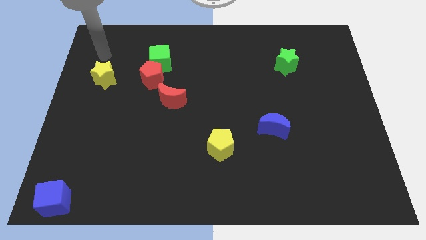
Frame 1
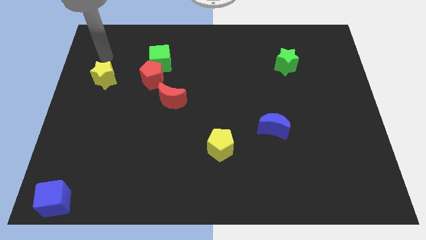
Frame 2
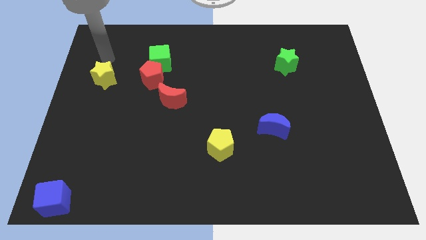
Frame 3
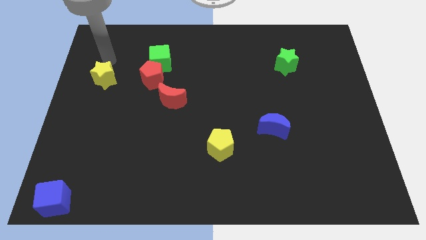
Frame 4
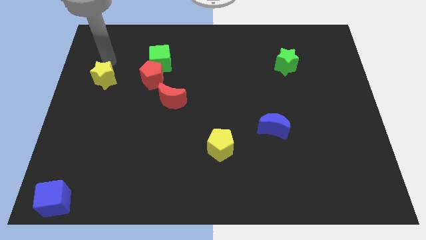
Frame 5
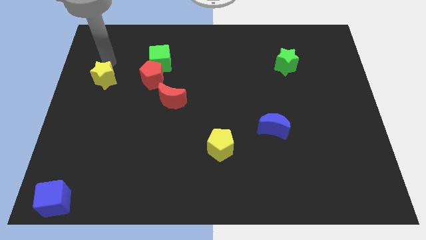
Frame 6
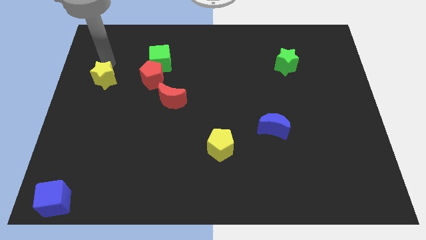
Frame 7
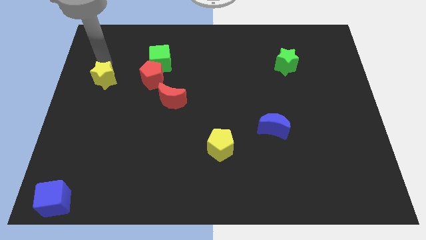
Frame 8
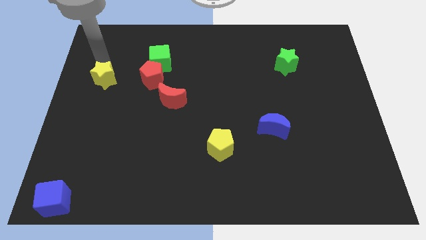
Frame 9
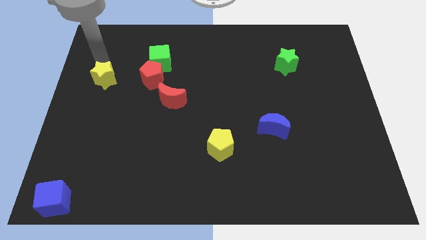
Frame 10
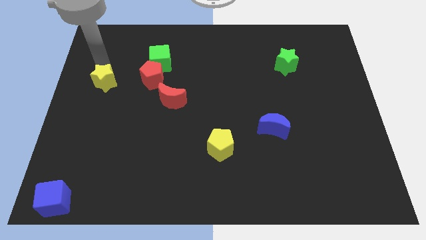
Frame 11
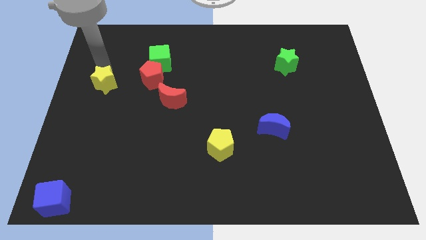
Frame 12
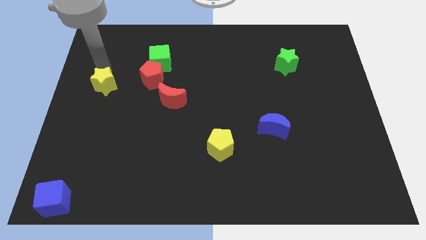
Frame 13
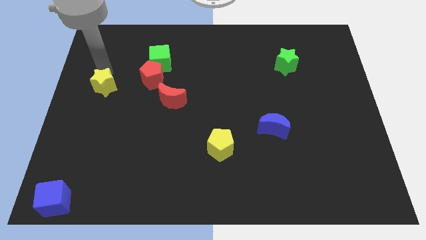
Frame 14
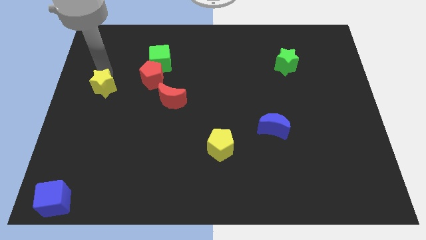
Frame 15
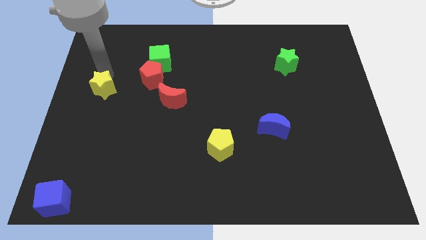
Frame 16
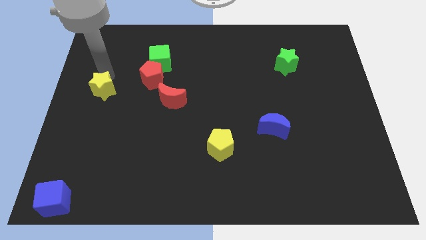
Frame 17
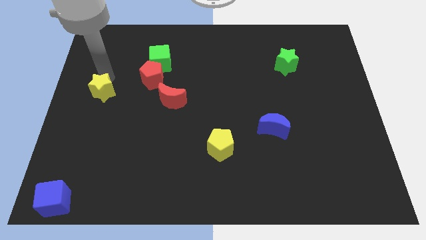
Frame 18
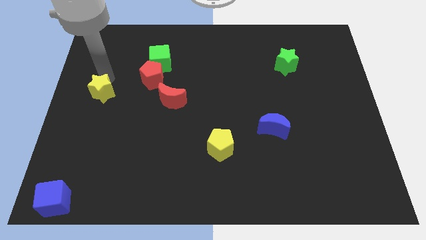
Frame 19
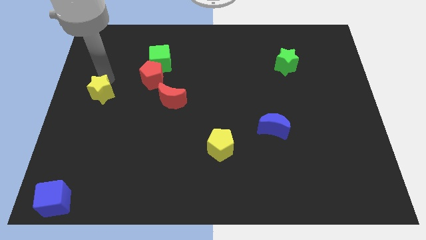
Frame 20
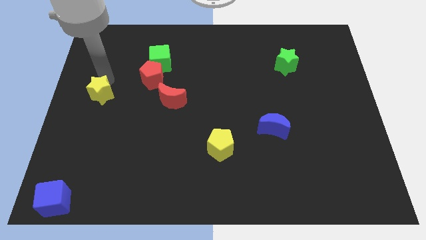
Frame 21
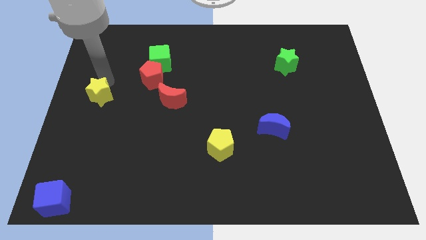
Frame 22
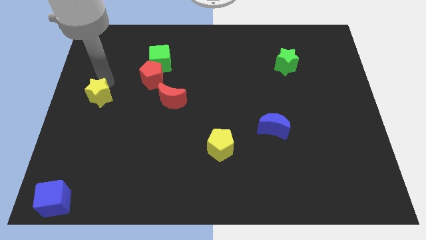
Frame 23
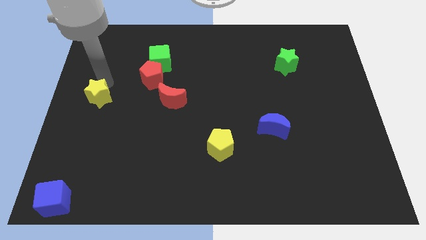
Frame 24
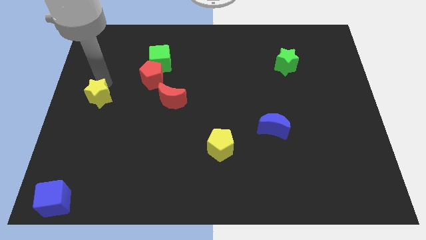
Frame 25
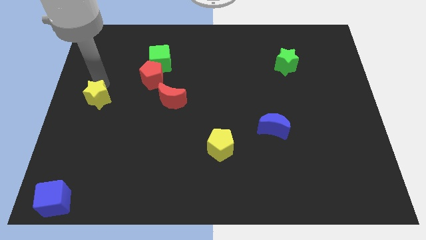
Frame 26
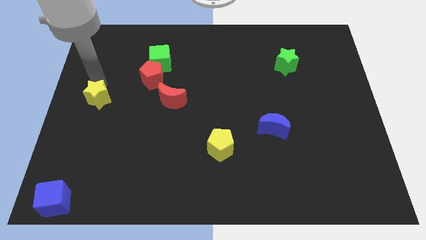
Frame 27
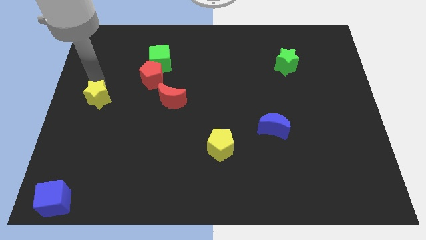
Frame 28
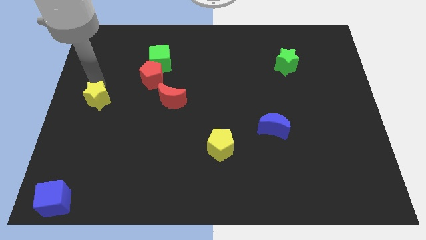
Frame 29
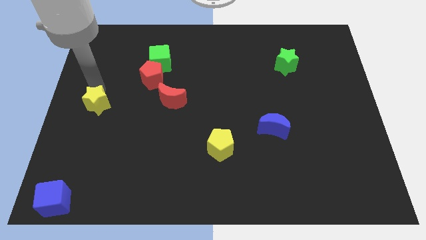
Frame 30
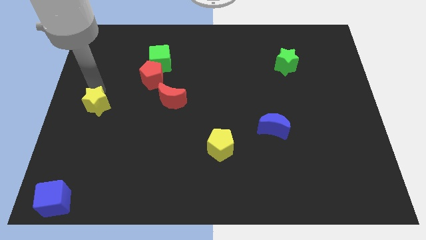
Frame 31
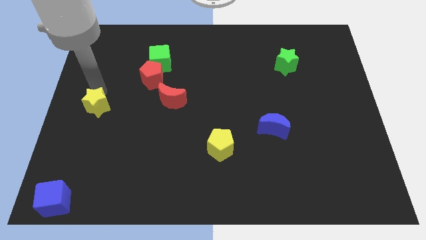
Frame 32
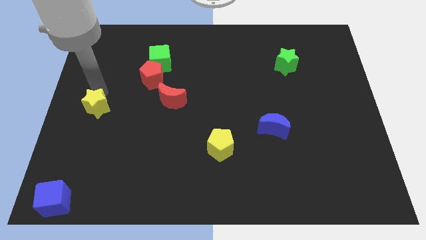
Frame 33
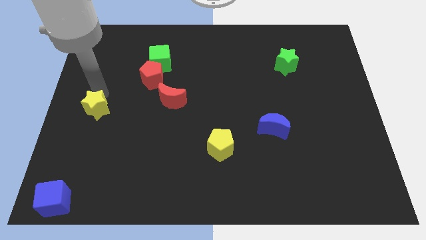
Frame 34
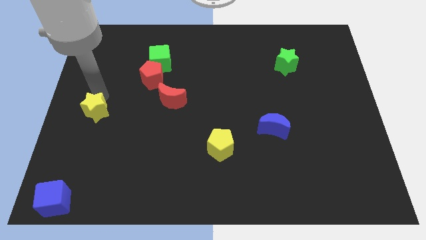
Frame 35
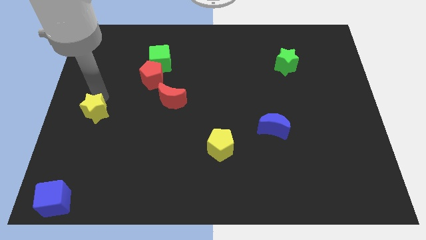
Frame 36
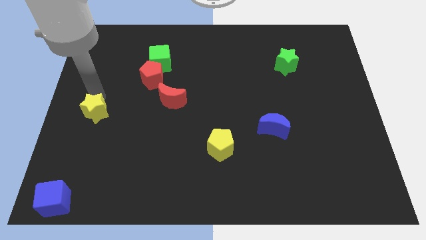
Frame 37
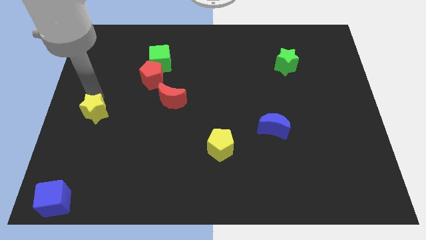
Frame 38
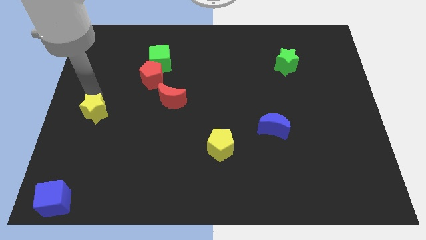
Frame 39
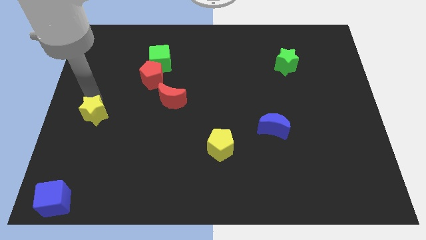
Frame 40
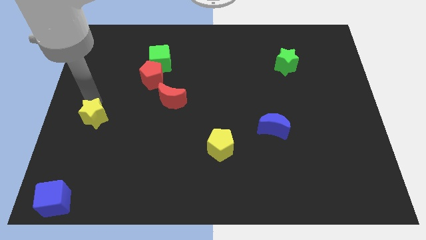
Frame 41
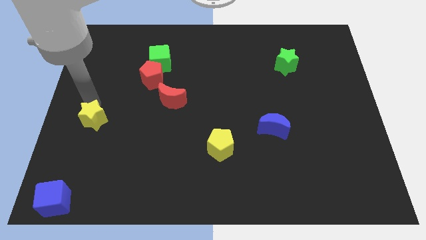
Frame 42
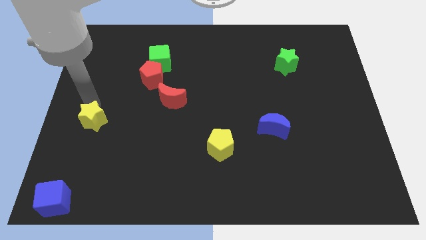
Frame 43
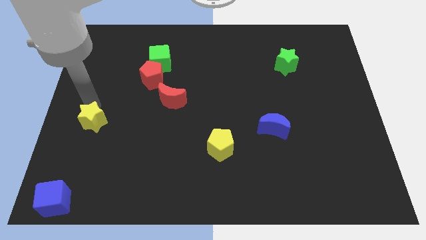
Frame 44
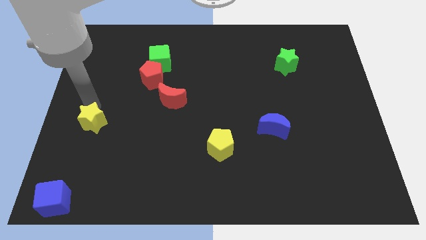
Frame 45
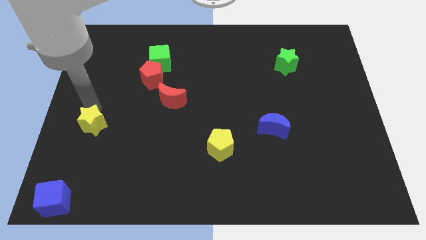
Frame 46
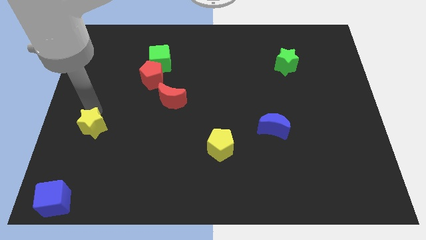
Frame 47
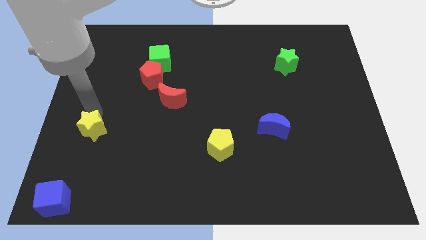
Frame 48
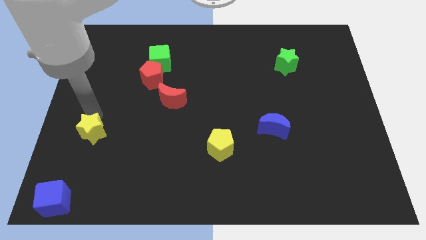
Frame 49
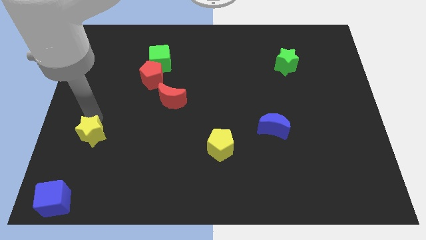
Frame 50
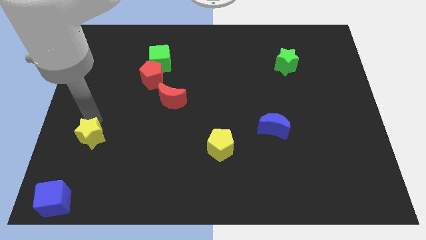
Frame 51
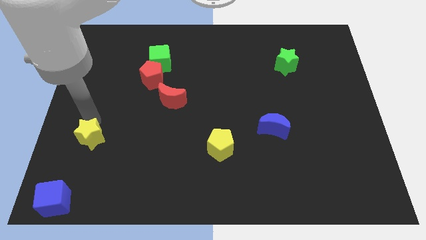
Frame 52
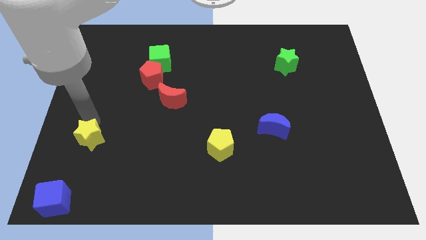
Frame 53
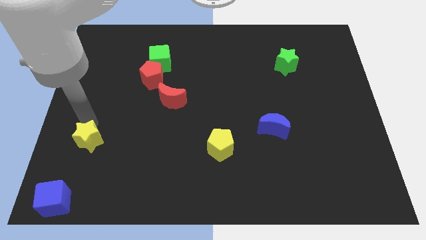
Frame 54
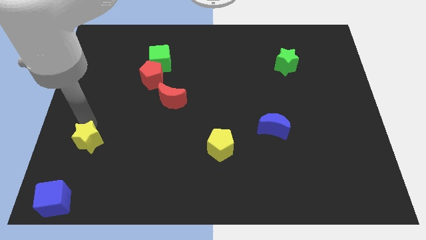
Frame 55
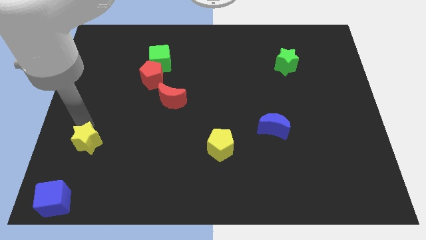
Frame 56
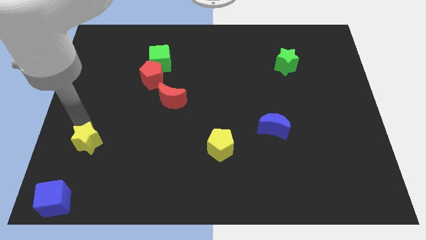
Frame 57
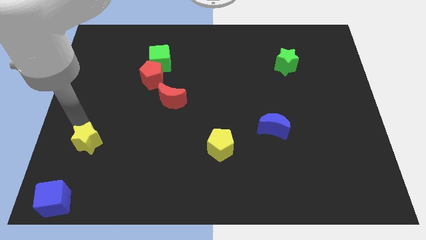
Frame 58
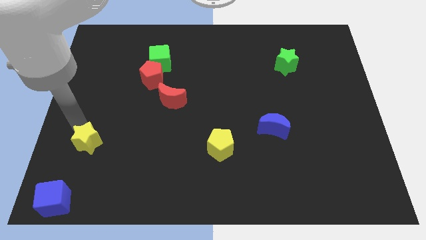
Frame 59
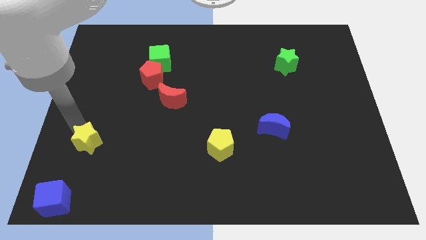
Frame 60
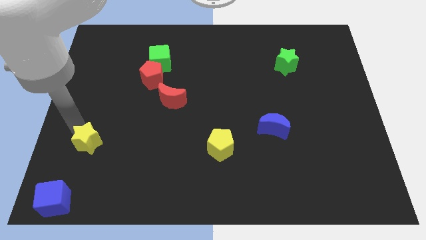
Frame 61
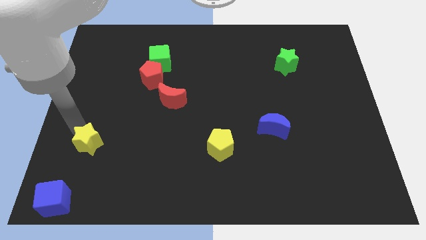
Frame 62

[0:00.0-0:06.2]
drag the yellow star towards the blue cube

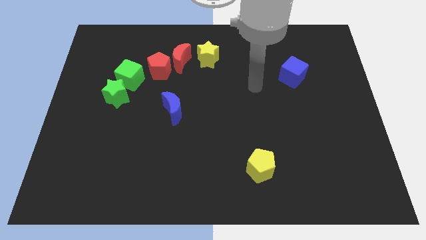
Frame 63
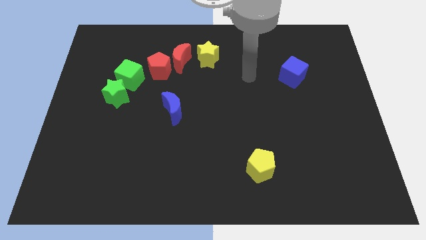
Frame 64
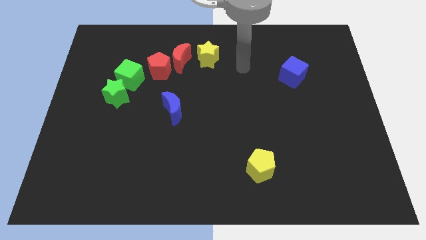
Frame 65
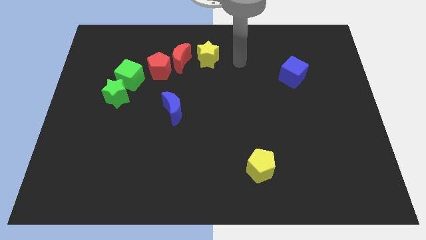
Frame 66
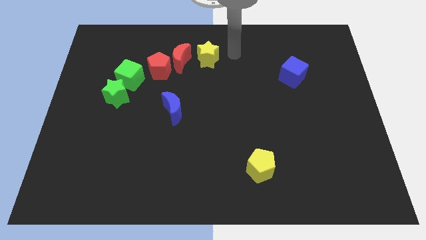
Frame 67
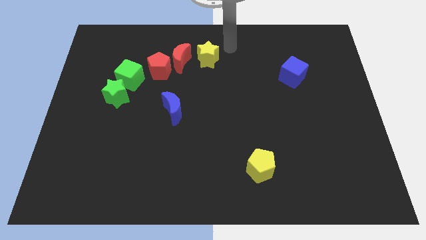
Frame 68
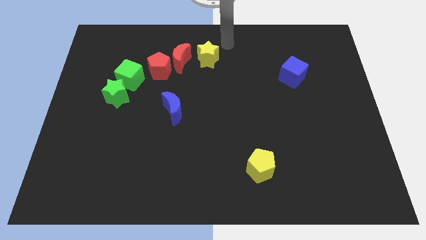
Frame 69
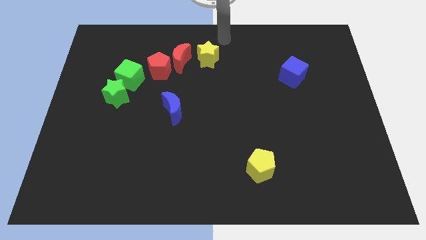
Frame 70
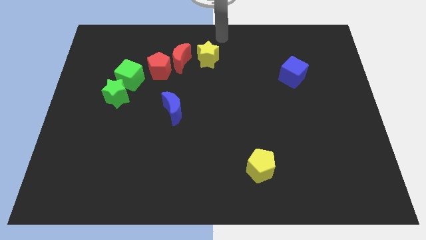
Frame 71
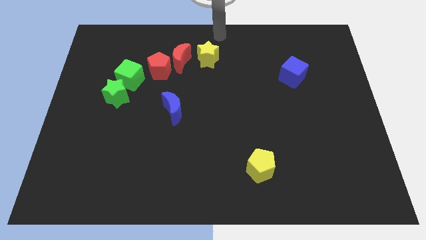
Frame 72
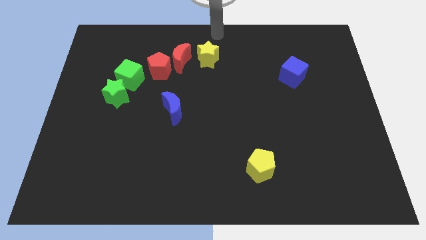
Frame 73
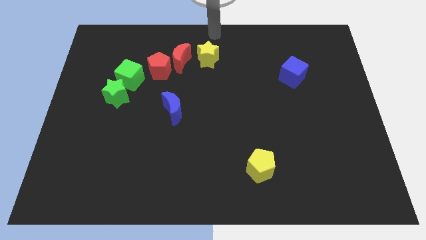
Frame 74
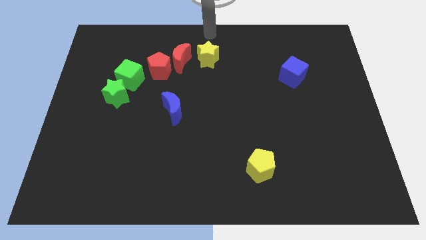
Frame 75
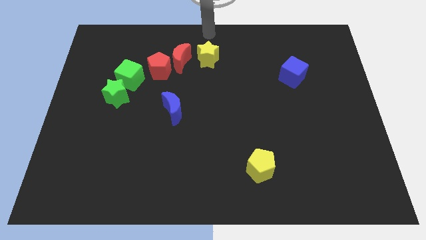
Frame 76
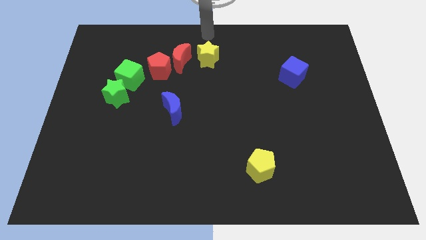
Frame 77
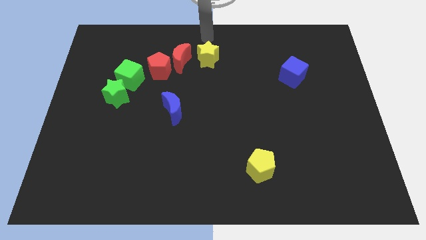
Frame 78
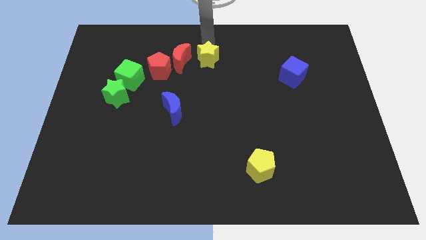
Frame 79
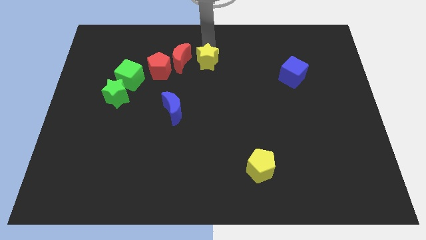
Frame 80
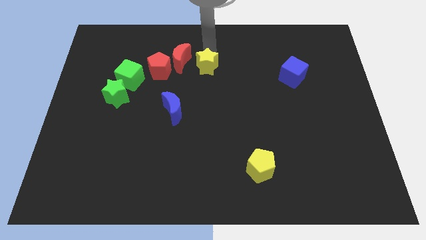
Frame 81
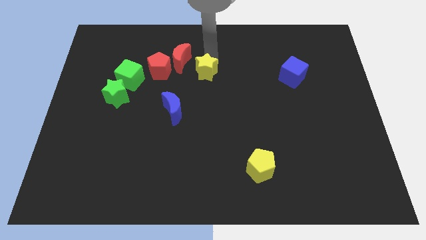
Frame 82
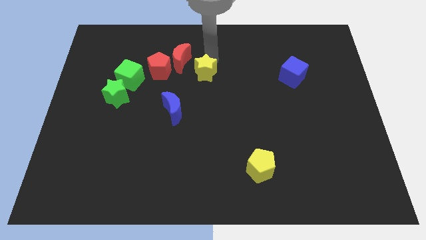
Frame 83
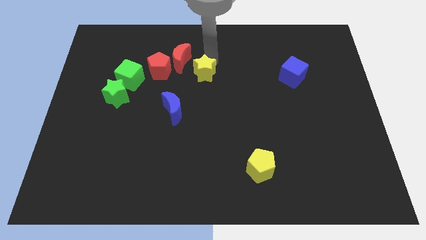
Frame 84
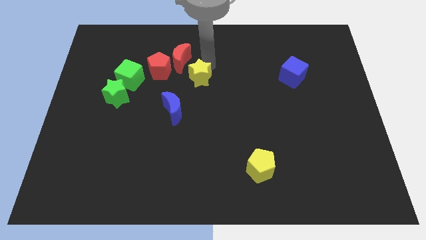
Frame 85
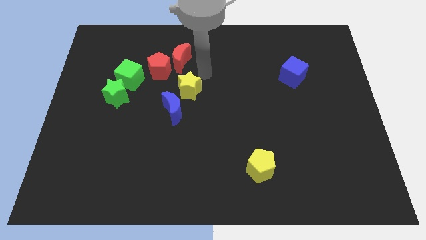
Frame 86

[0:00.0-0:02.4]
slightly push the yellow star to the top right of the blue moon

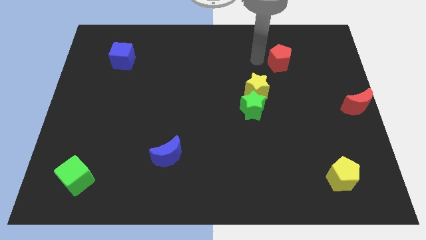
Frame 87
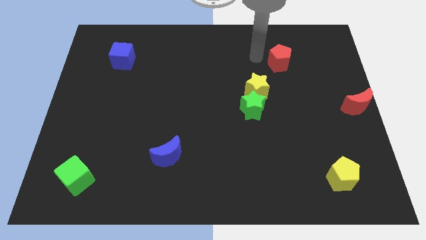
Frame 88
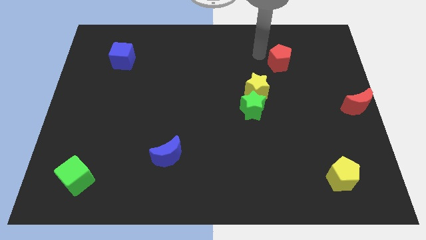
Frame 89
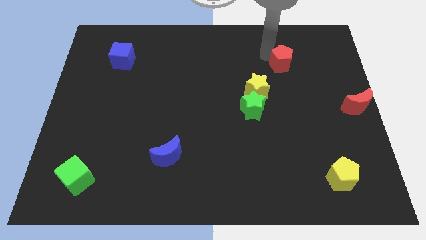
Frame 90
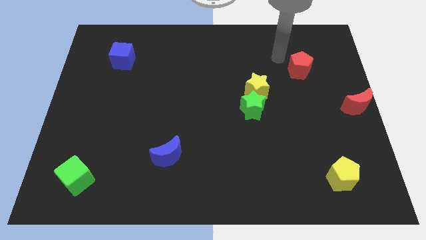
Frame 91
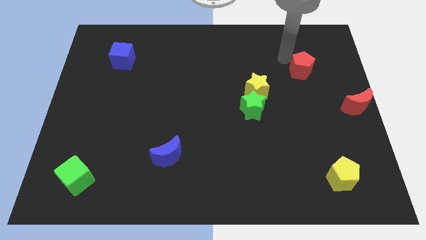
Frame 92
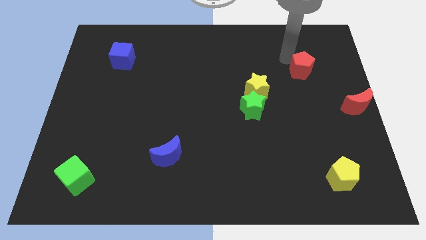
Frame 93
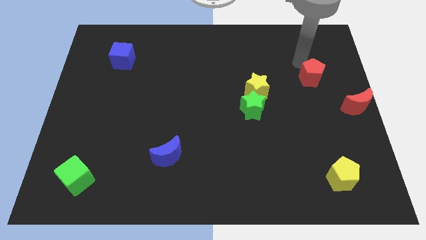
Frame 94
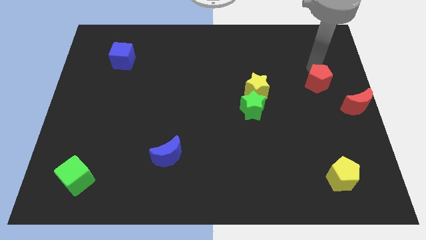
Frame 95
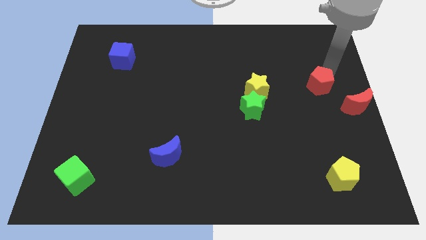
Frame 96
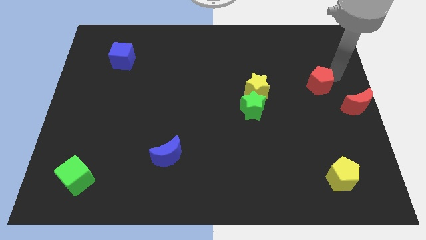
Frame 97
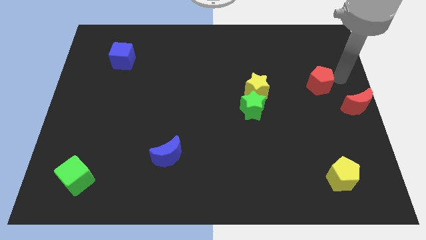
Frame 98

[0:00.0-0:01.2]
move the red pentagon diagonally top left to red moon
